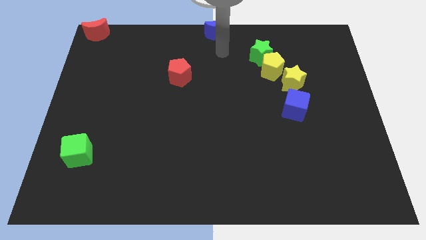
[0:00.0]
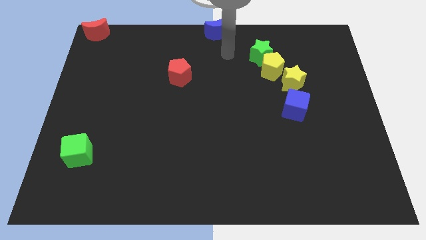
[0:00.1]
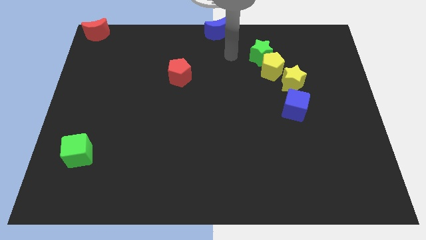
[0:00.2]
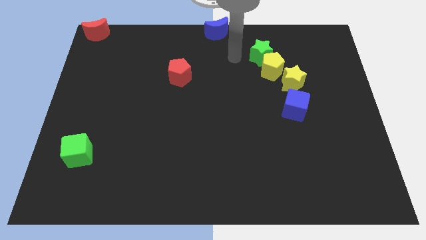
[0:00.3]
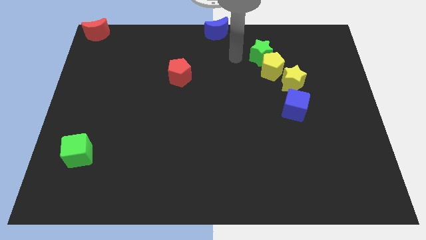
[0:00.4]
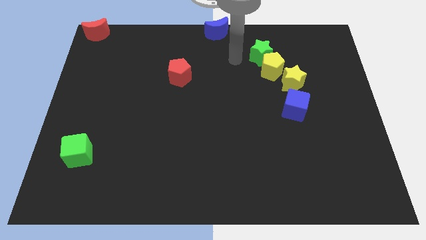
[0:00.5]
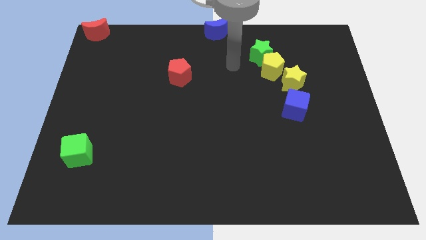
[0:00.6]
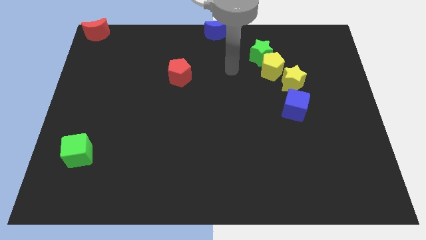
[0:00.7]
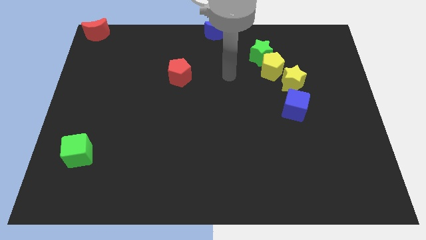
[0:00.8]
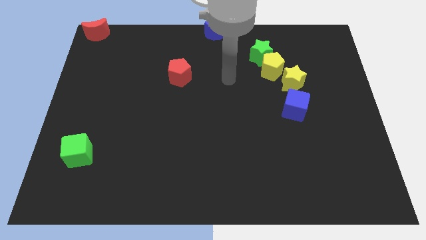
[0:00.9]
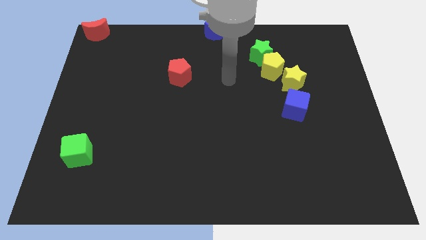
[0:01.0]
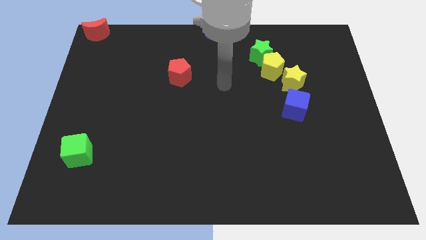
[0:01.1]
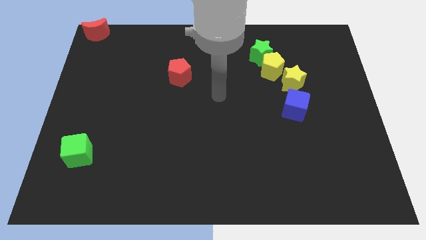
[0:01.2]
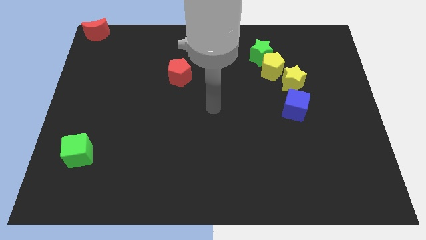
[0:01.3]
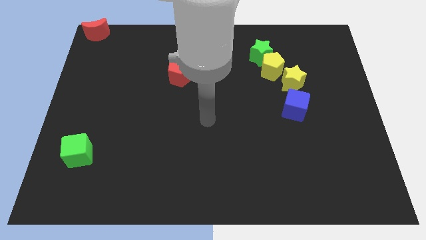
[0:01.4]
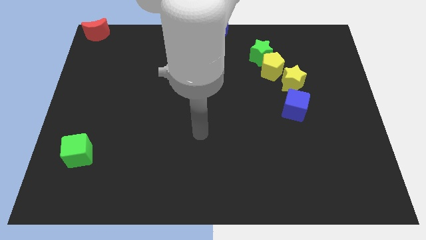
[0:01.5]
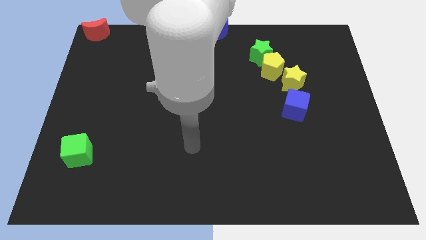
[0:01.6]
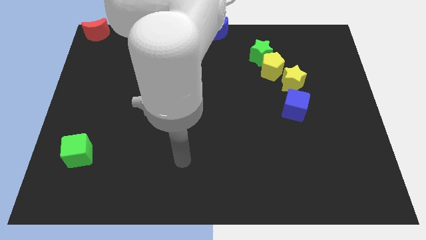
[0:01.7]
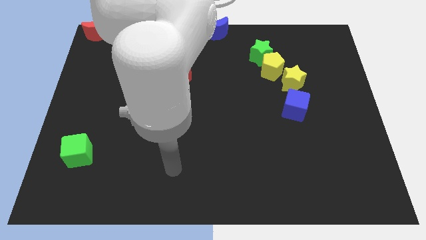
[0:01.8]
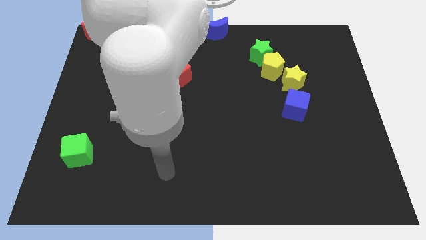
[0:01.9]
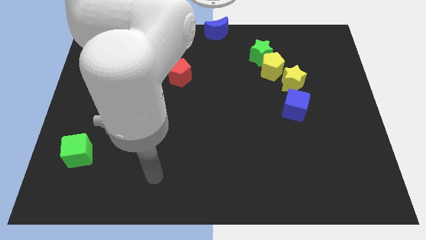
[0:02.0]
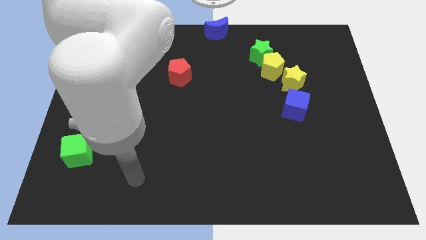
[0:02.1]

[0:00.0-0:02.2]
go to the bottom side of the table

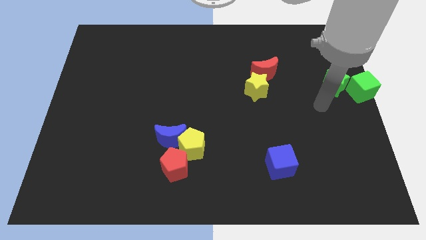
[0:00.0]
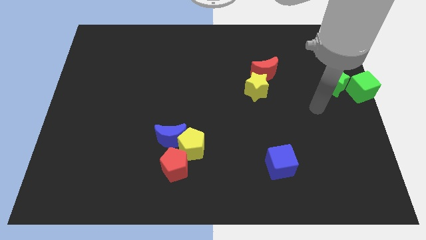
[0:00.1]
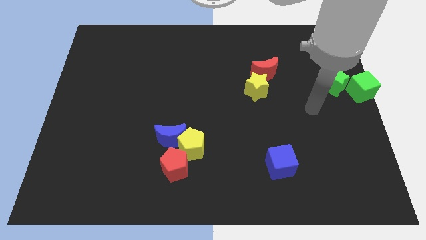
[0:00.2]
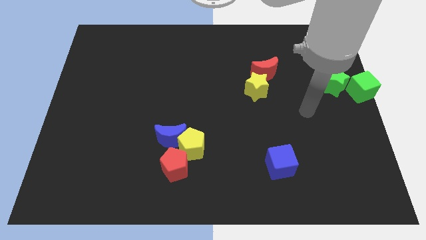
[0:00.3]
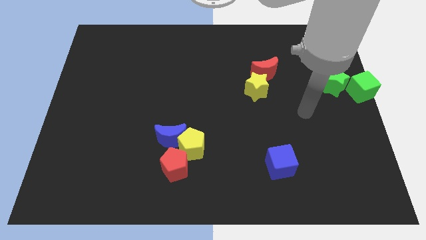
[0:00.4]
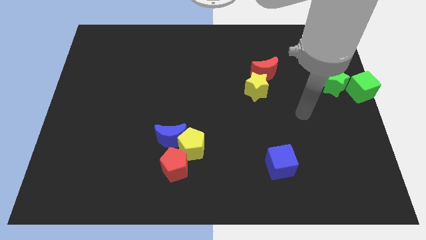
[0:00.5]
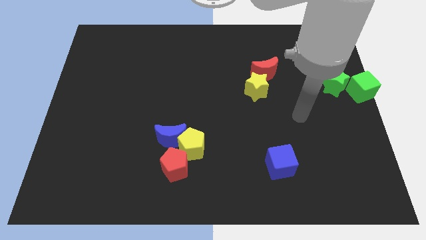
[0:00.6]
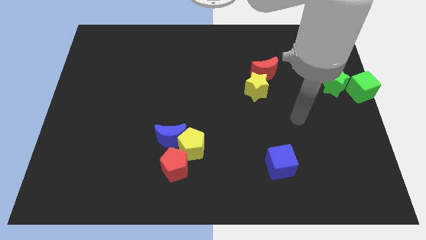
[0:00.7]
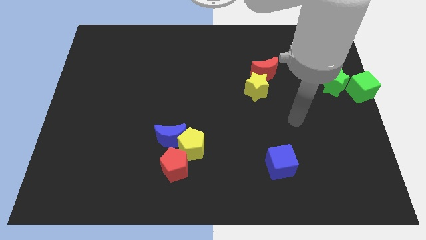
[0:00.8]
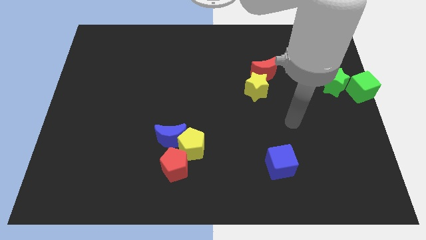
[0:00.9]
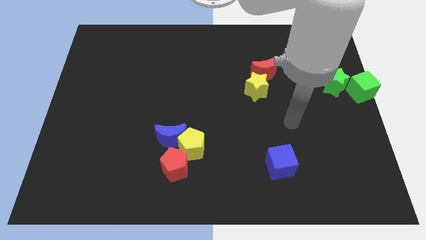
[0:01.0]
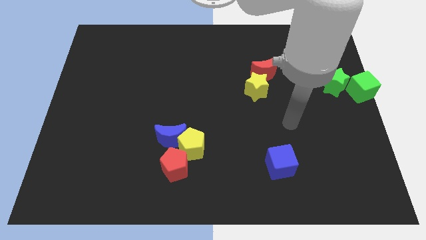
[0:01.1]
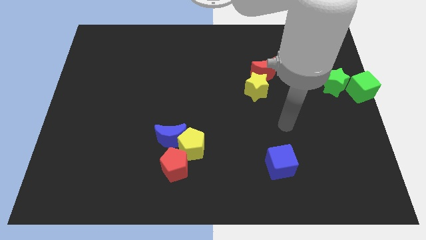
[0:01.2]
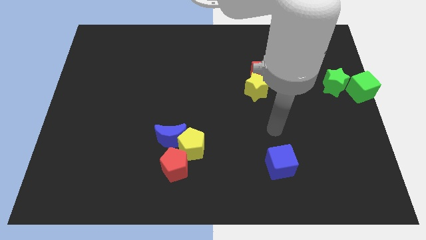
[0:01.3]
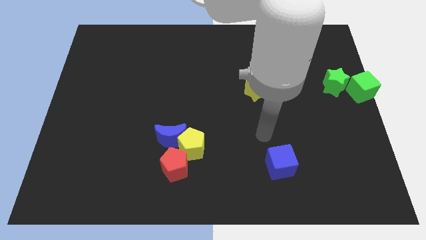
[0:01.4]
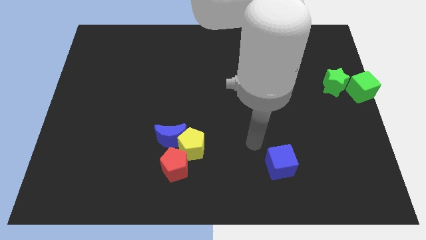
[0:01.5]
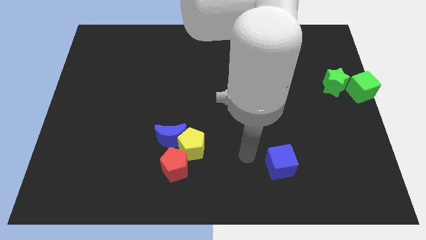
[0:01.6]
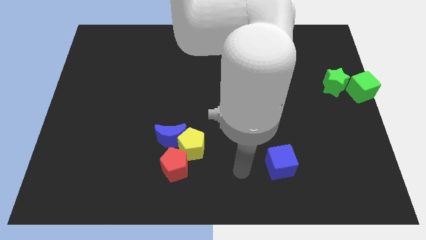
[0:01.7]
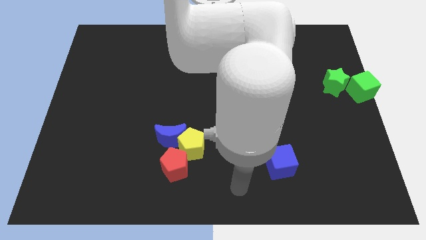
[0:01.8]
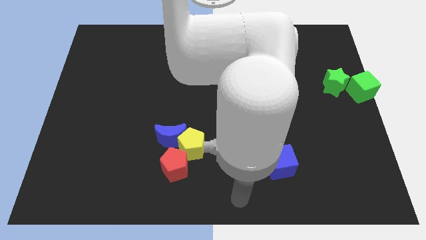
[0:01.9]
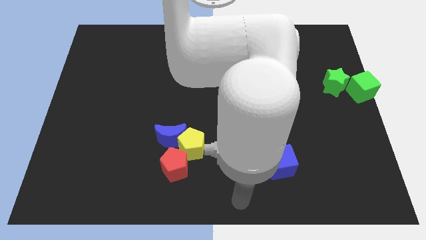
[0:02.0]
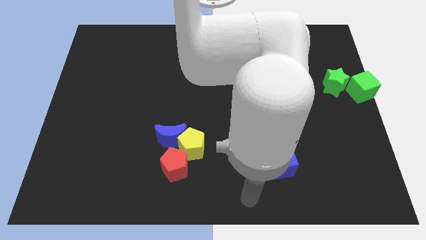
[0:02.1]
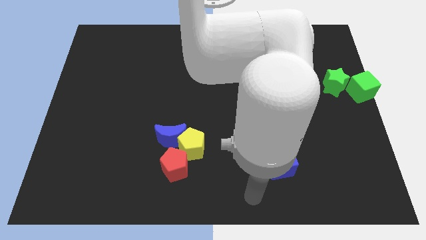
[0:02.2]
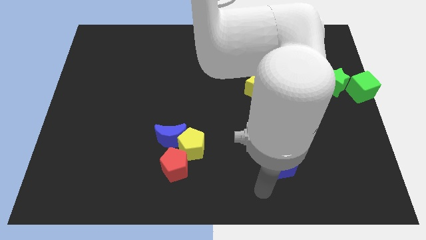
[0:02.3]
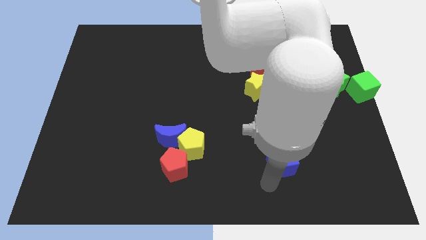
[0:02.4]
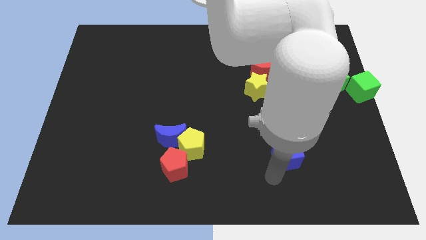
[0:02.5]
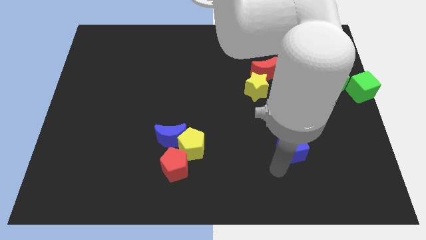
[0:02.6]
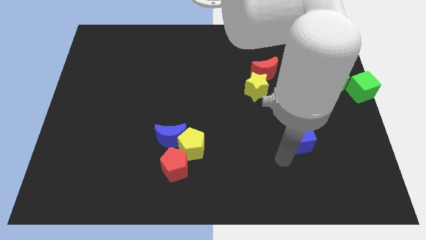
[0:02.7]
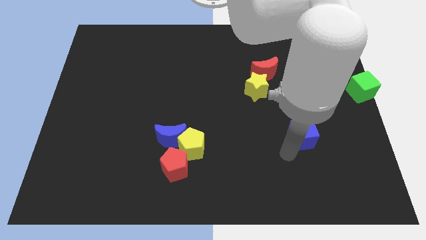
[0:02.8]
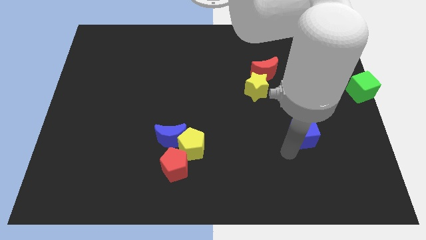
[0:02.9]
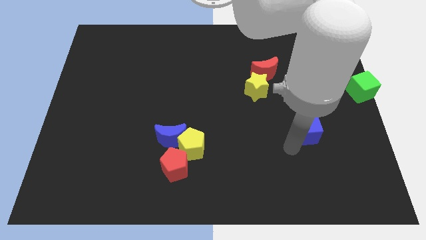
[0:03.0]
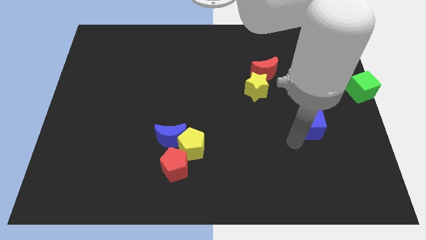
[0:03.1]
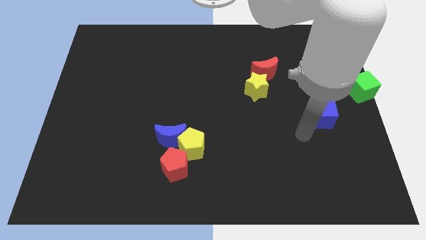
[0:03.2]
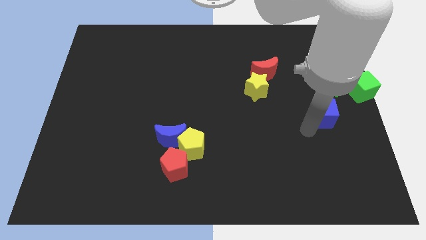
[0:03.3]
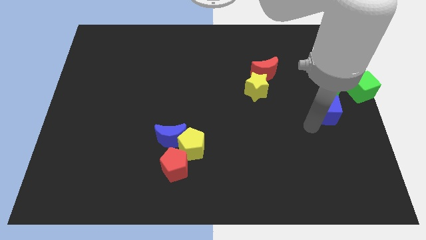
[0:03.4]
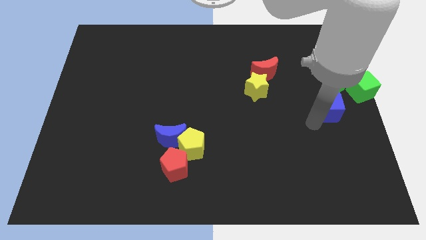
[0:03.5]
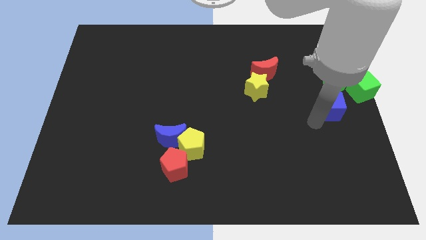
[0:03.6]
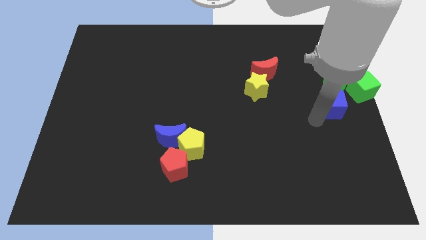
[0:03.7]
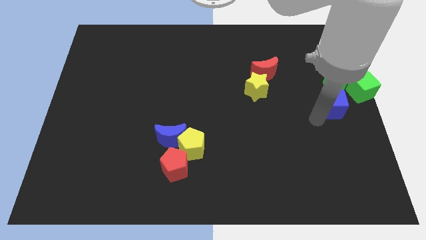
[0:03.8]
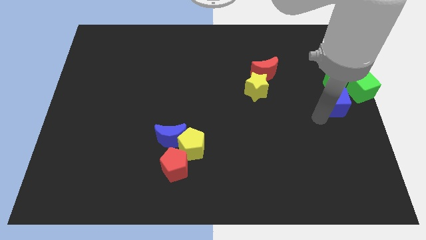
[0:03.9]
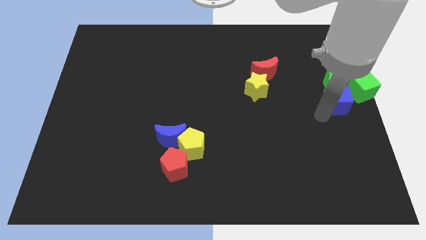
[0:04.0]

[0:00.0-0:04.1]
place the blue cube below the green star

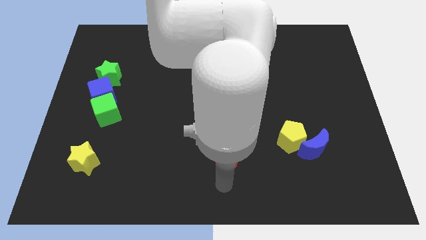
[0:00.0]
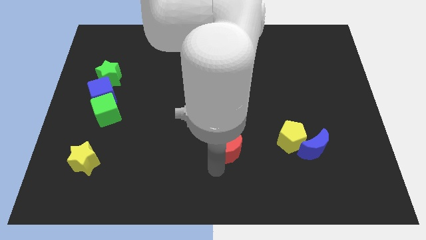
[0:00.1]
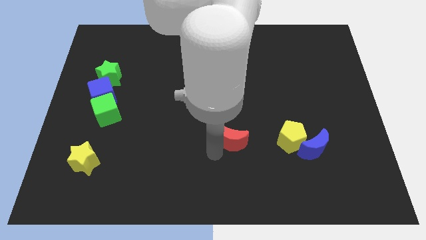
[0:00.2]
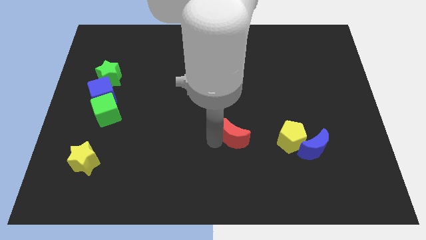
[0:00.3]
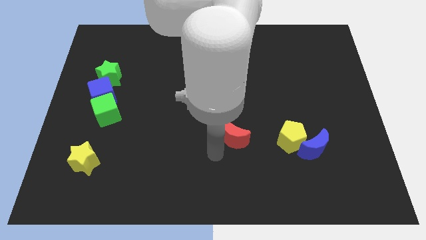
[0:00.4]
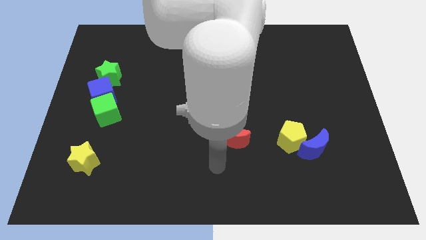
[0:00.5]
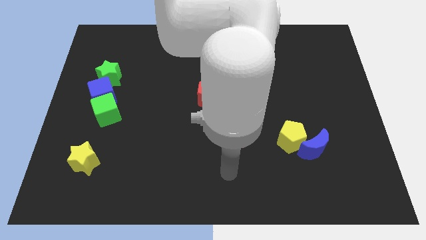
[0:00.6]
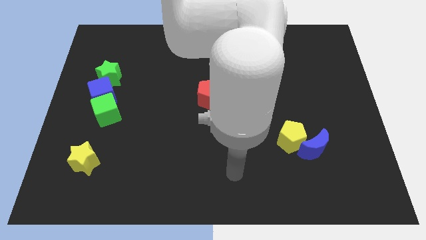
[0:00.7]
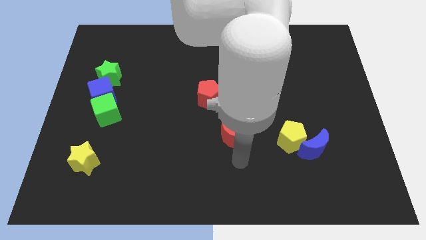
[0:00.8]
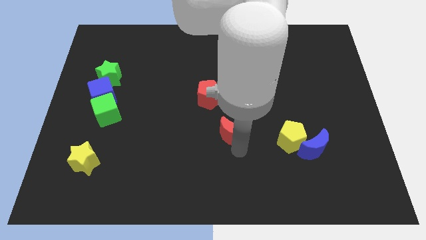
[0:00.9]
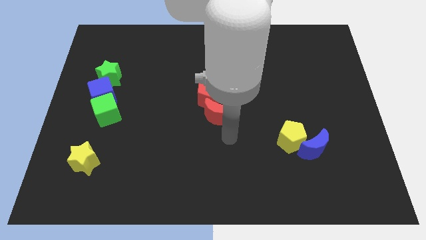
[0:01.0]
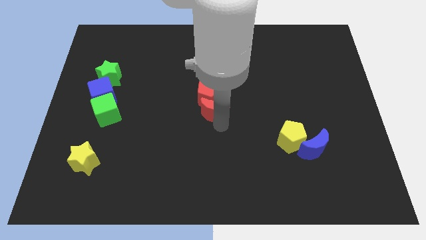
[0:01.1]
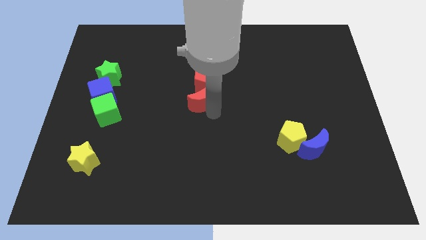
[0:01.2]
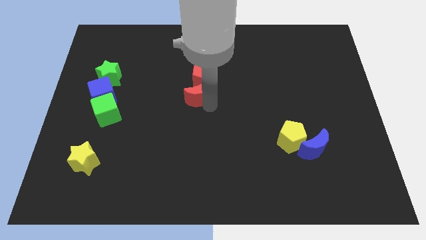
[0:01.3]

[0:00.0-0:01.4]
place both the red blocks at the center of the board

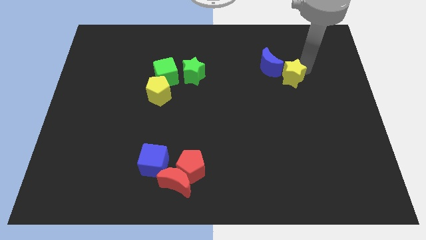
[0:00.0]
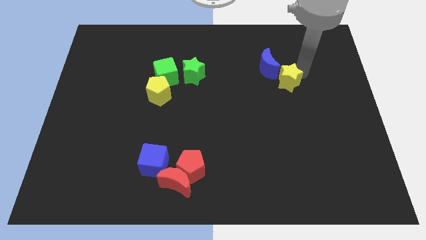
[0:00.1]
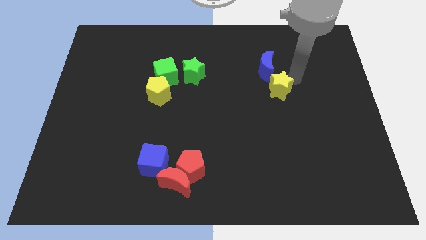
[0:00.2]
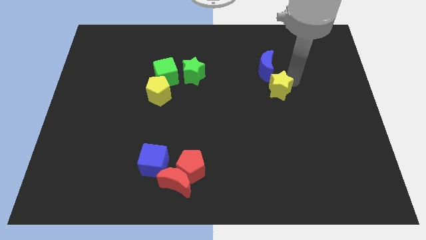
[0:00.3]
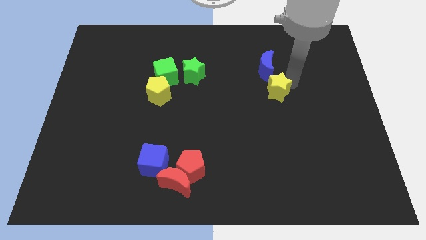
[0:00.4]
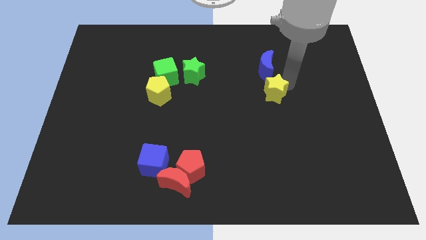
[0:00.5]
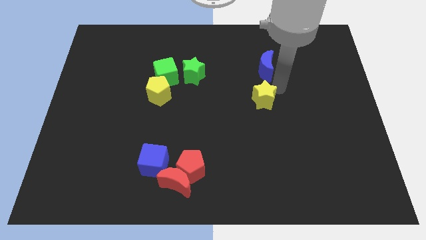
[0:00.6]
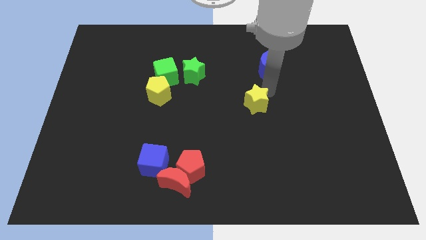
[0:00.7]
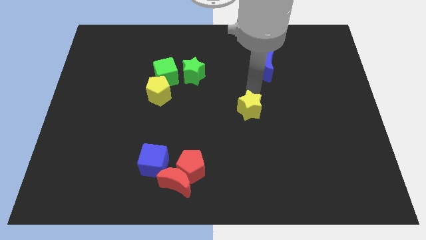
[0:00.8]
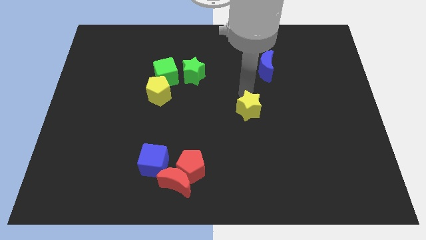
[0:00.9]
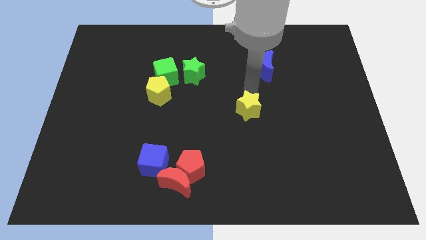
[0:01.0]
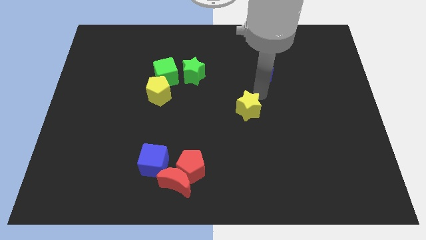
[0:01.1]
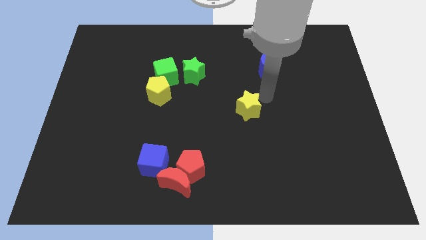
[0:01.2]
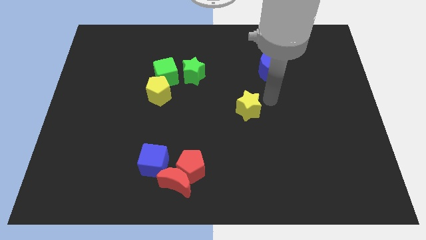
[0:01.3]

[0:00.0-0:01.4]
push yellow star away from the blue moon
